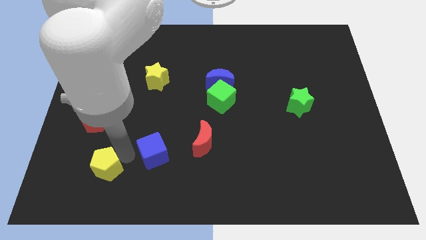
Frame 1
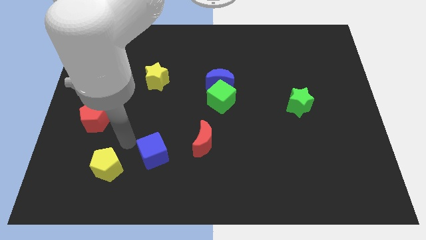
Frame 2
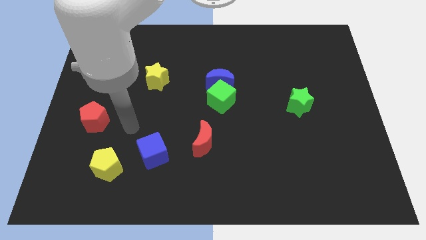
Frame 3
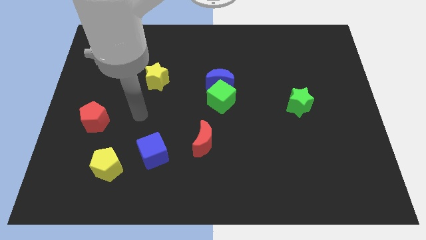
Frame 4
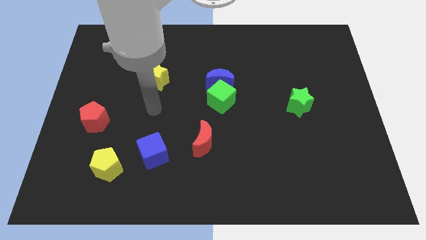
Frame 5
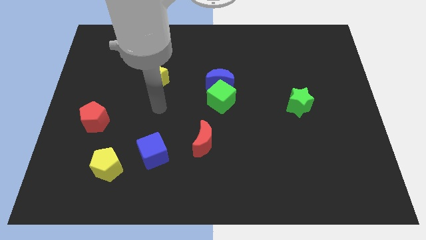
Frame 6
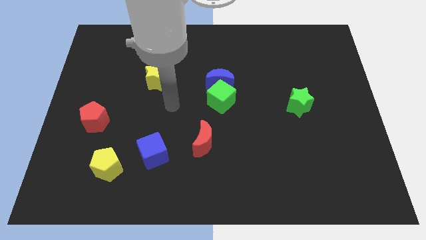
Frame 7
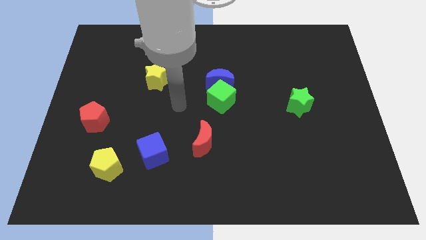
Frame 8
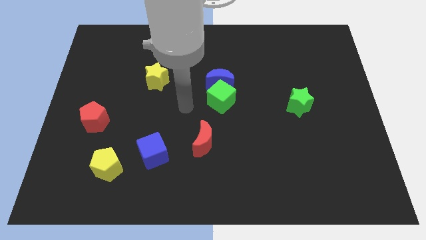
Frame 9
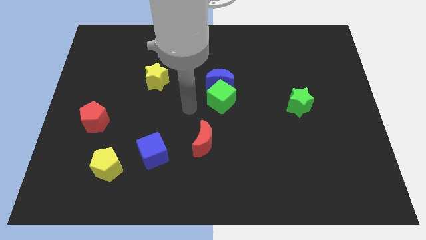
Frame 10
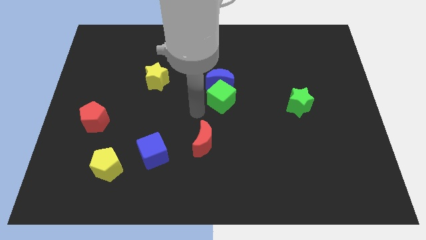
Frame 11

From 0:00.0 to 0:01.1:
push your arm to the left of the green cube

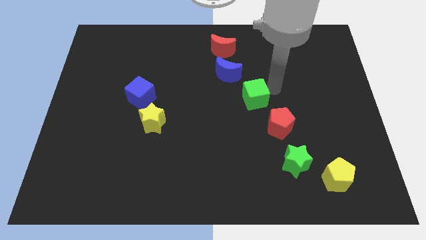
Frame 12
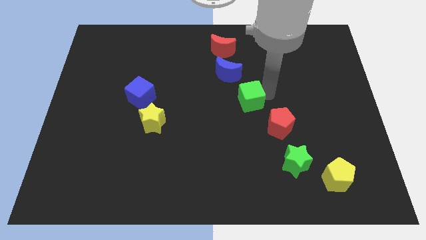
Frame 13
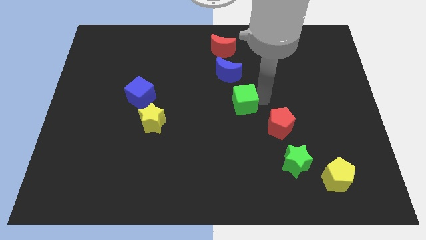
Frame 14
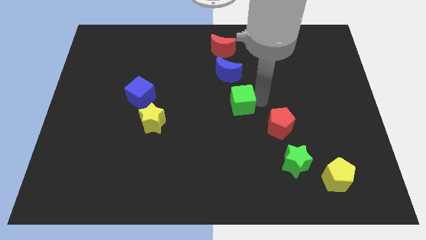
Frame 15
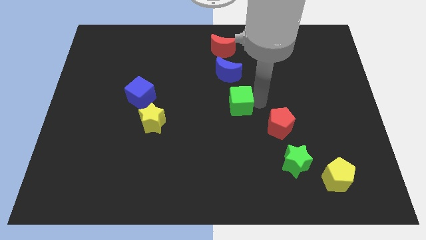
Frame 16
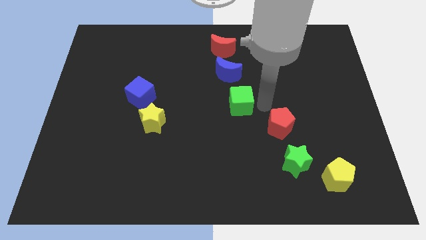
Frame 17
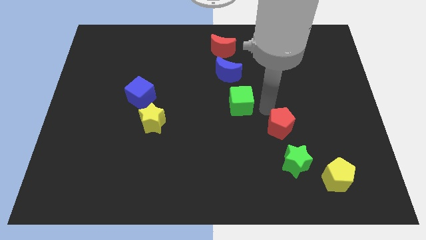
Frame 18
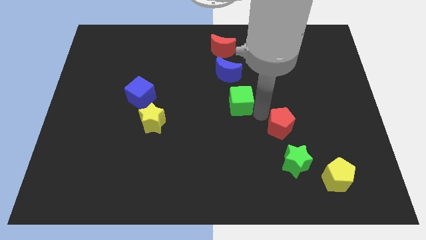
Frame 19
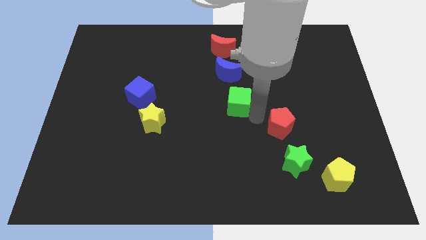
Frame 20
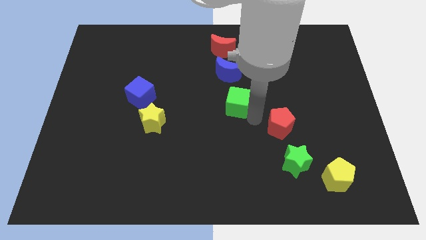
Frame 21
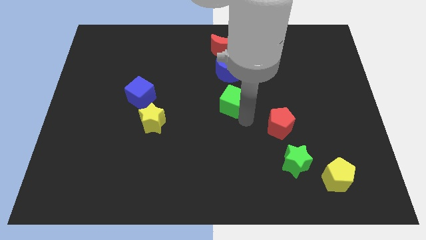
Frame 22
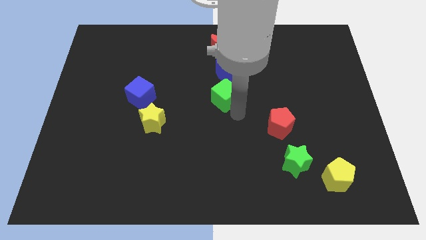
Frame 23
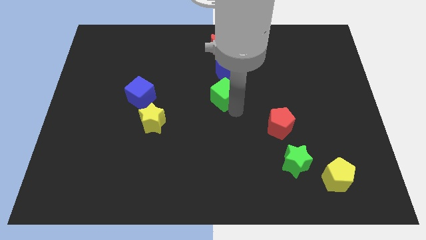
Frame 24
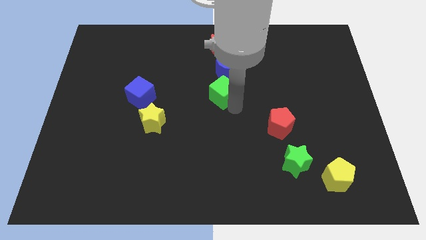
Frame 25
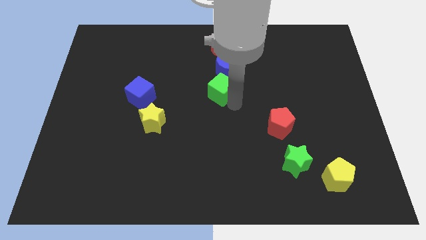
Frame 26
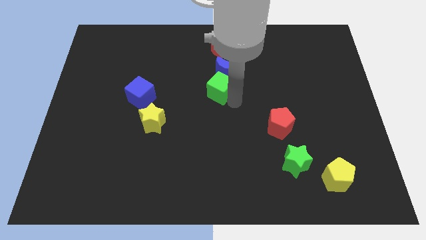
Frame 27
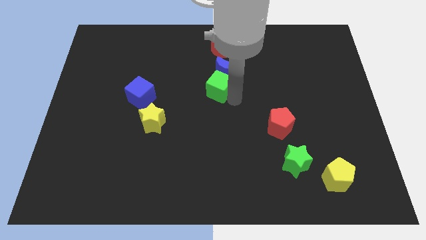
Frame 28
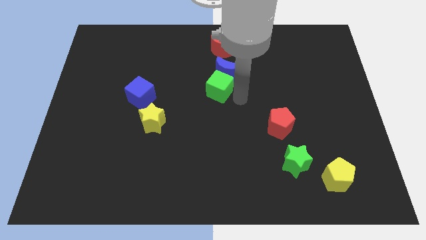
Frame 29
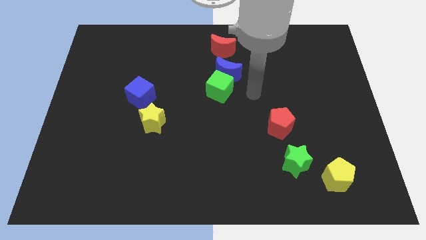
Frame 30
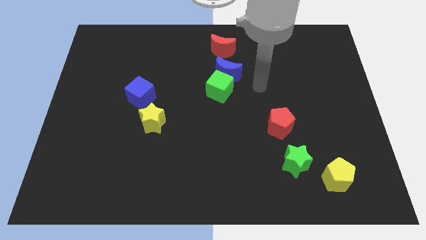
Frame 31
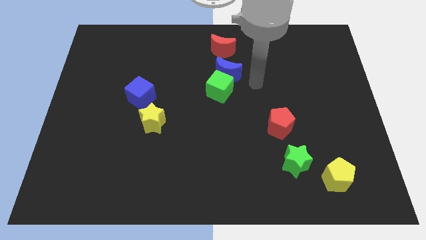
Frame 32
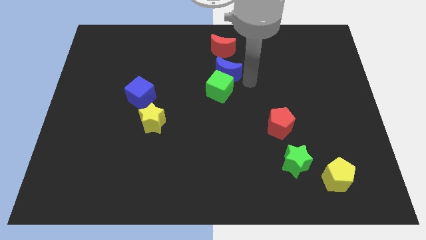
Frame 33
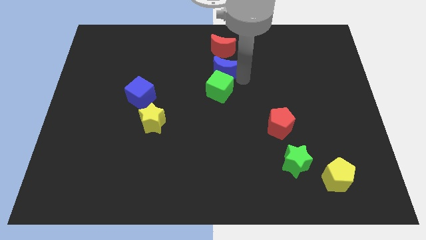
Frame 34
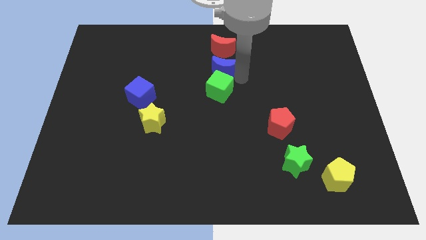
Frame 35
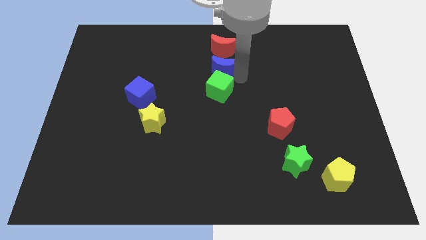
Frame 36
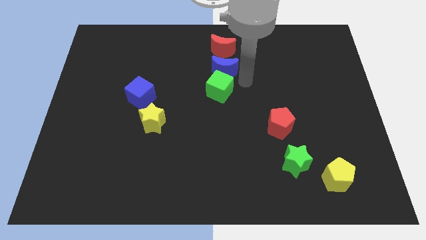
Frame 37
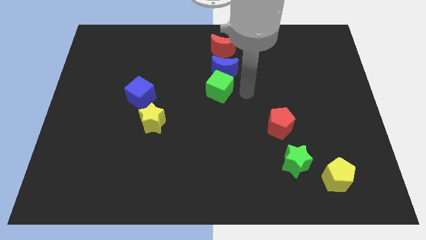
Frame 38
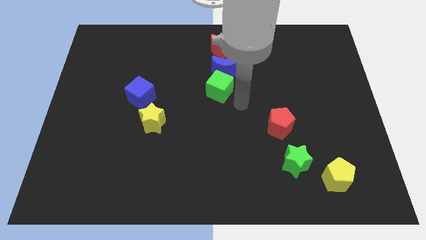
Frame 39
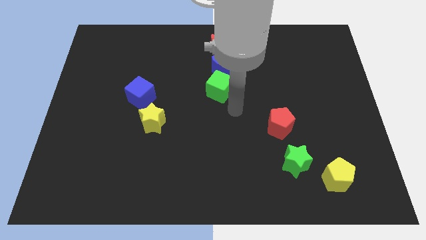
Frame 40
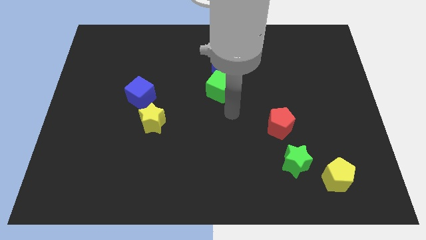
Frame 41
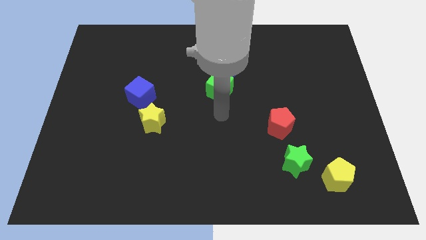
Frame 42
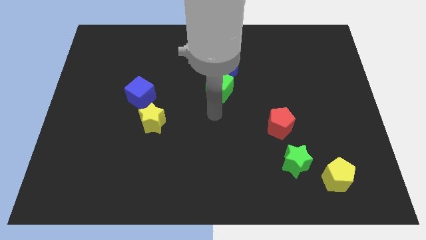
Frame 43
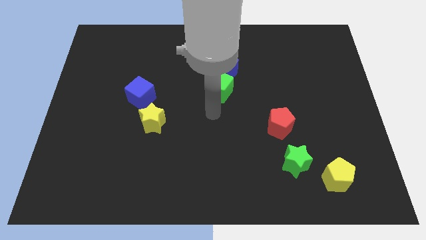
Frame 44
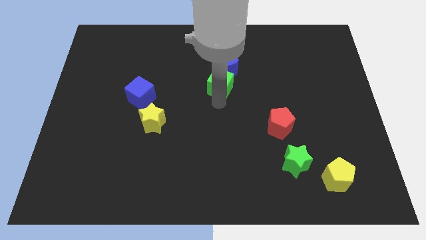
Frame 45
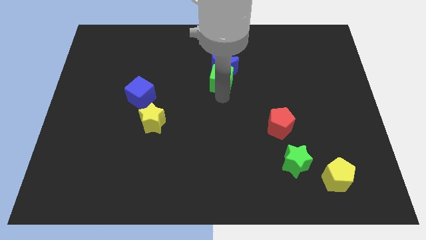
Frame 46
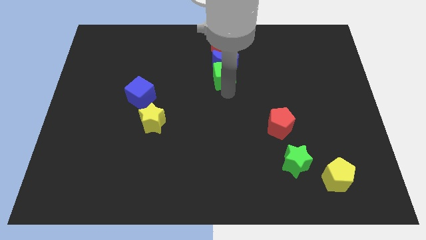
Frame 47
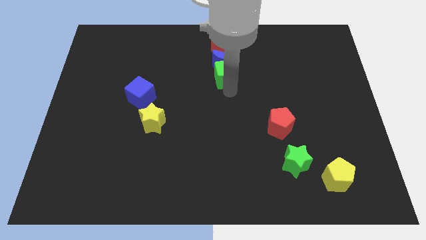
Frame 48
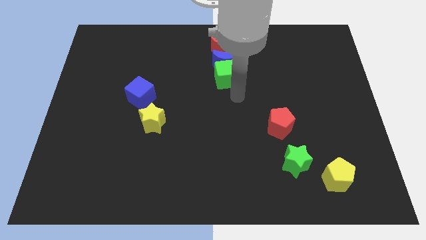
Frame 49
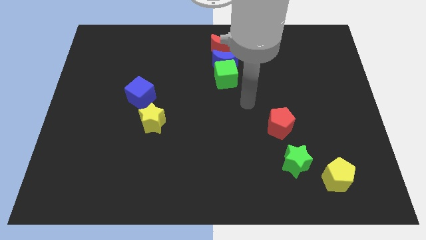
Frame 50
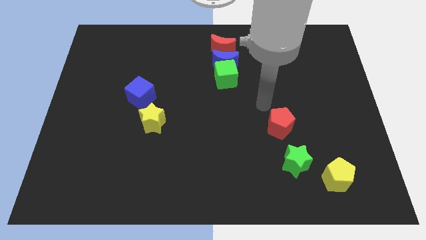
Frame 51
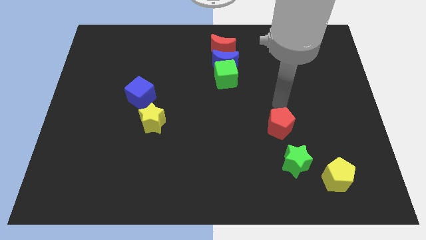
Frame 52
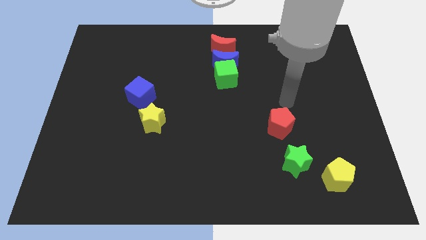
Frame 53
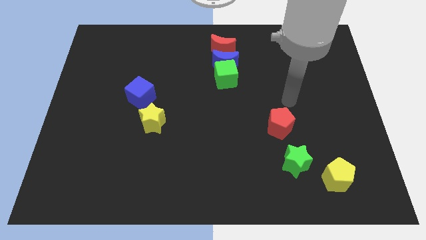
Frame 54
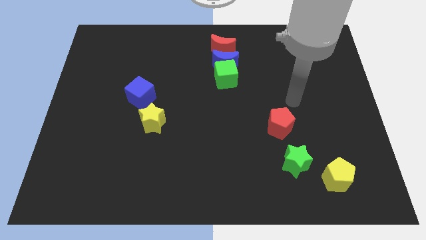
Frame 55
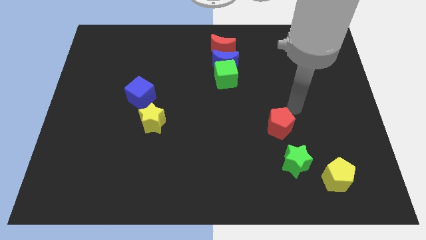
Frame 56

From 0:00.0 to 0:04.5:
push a group of blocks upward

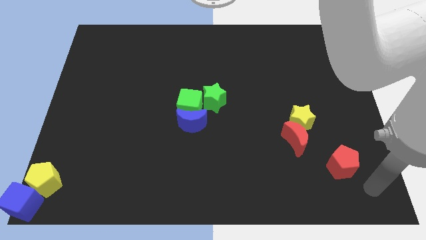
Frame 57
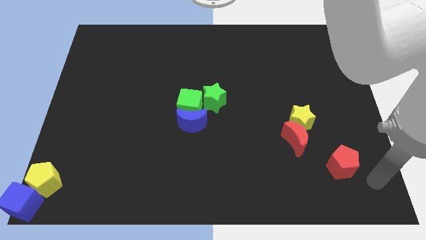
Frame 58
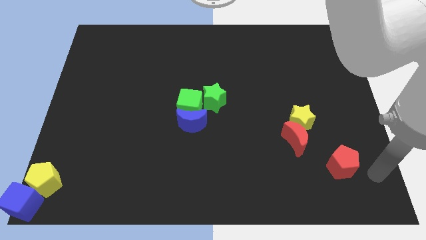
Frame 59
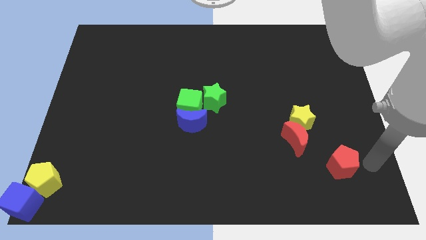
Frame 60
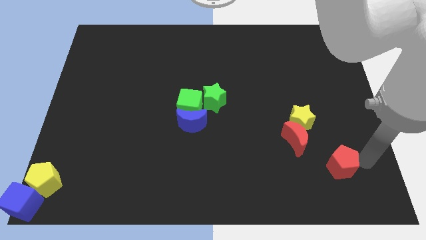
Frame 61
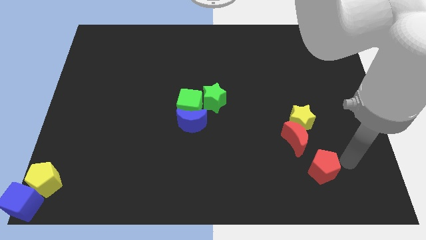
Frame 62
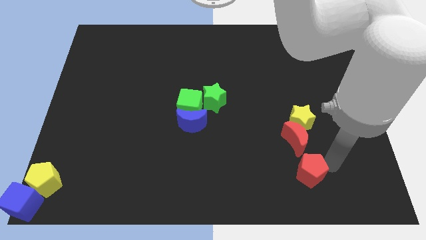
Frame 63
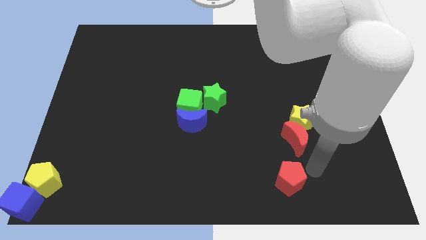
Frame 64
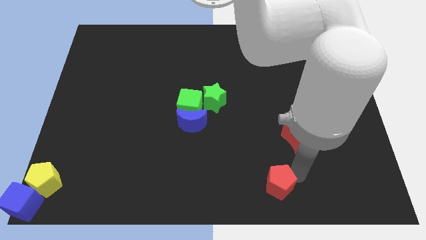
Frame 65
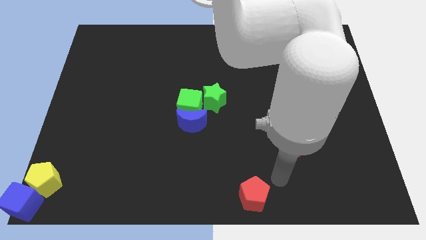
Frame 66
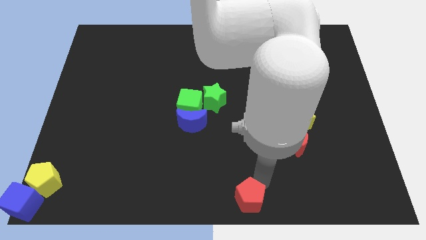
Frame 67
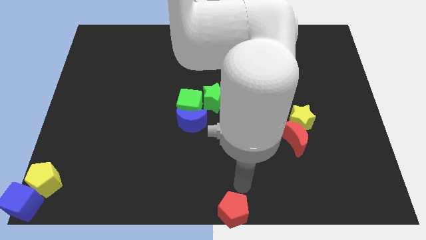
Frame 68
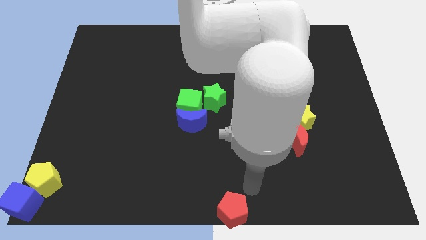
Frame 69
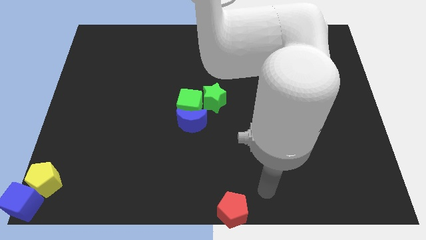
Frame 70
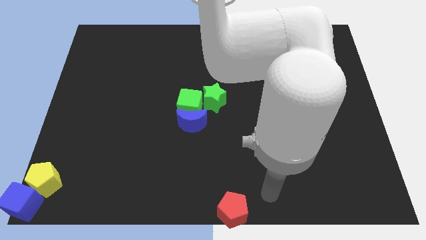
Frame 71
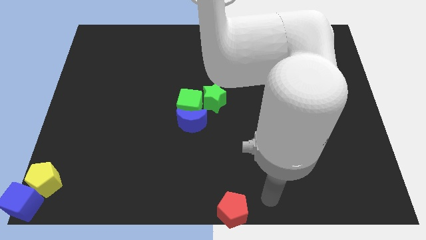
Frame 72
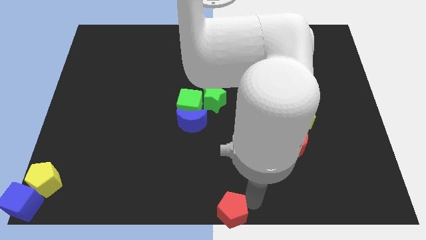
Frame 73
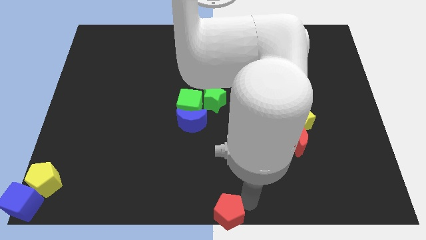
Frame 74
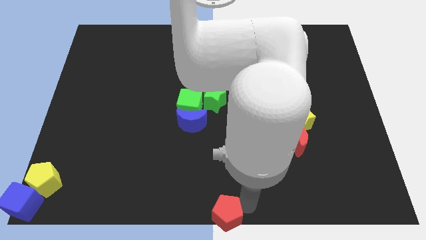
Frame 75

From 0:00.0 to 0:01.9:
push red pentagon below green star

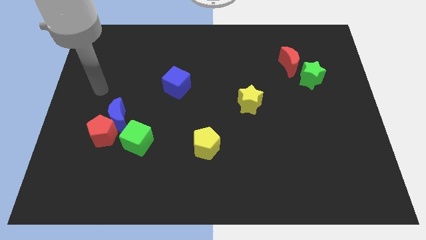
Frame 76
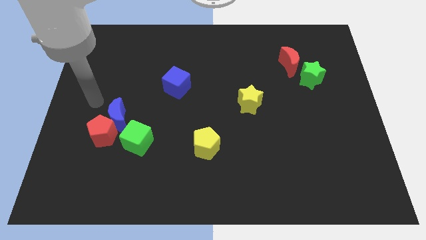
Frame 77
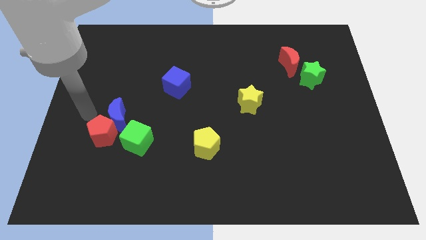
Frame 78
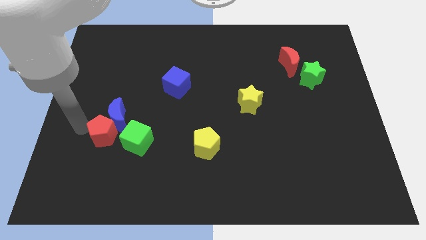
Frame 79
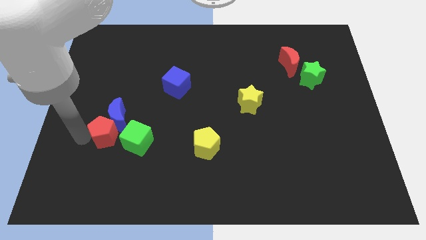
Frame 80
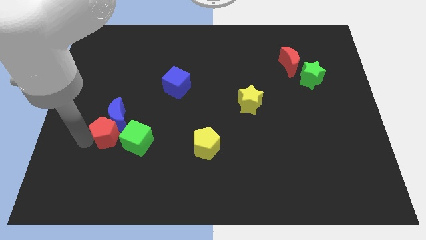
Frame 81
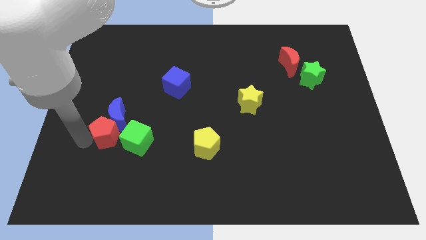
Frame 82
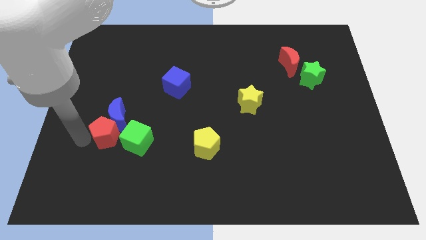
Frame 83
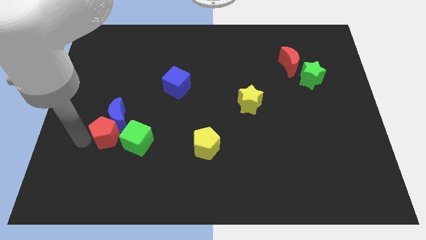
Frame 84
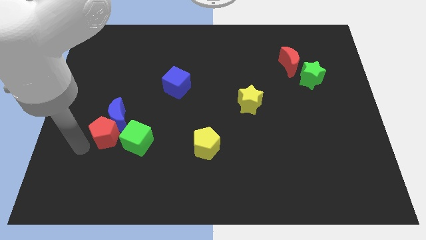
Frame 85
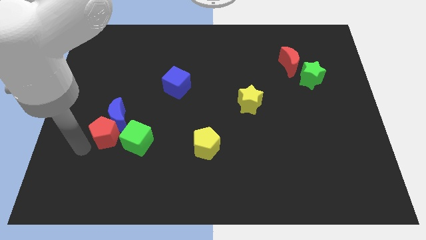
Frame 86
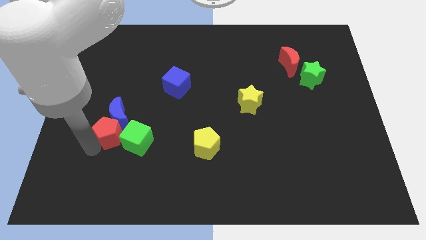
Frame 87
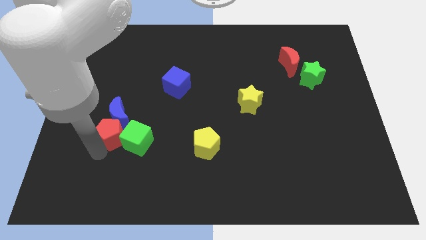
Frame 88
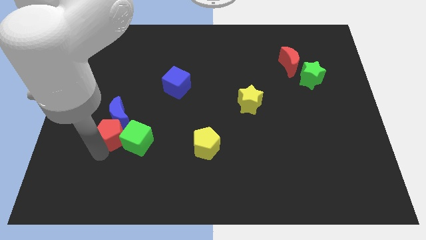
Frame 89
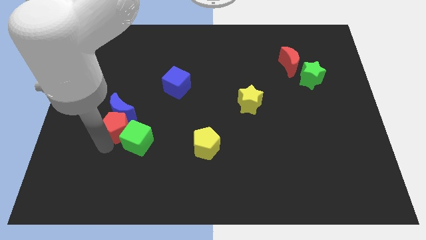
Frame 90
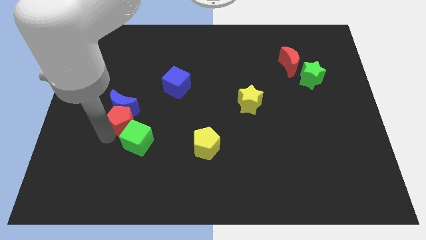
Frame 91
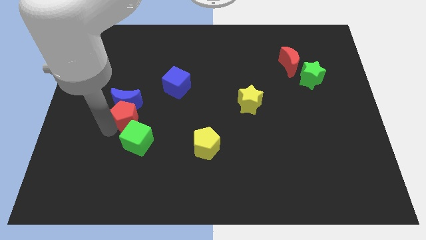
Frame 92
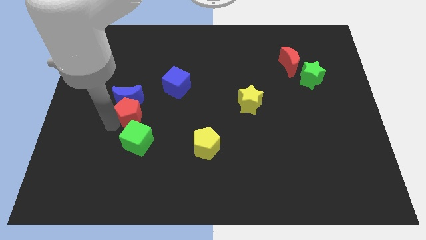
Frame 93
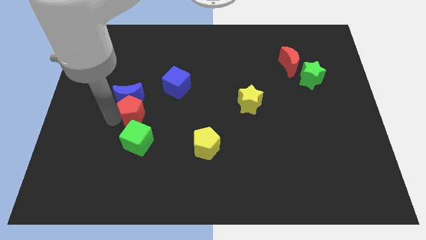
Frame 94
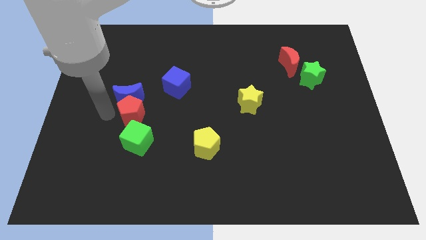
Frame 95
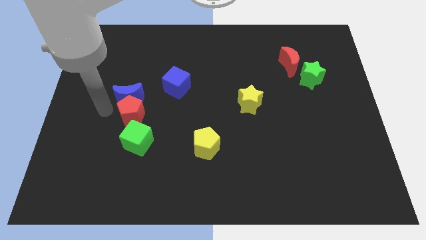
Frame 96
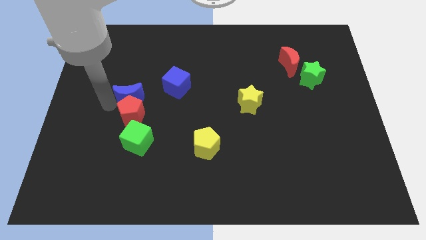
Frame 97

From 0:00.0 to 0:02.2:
push the red pentagon to the top of the green cube
